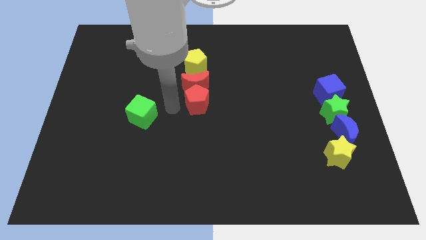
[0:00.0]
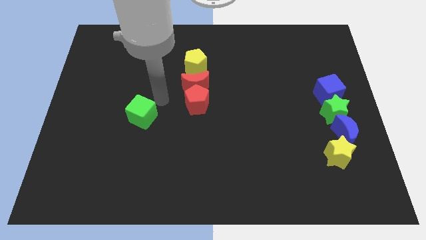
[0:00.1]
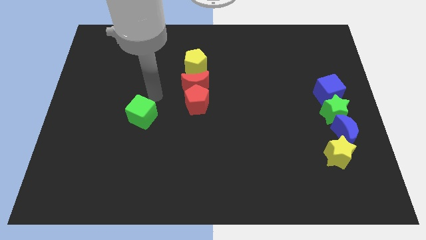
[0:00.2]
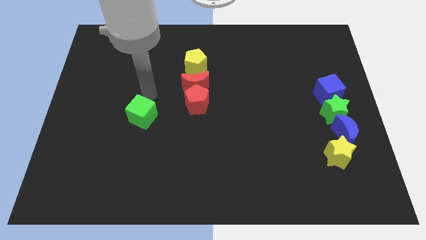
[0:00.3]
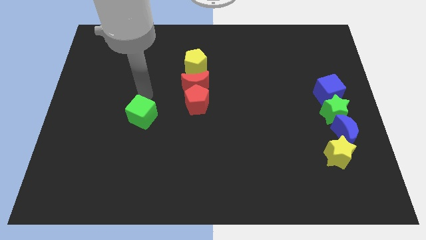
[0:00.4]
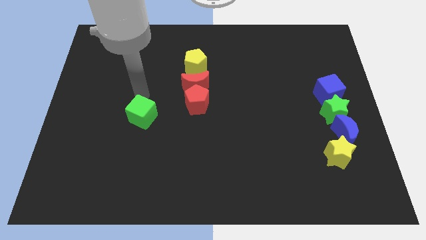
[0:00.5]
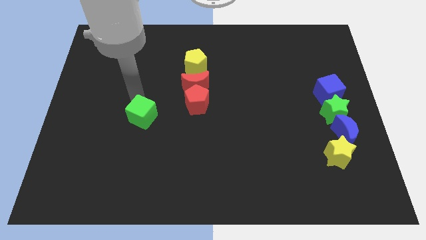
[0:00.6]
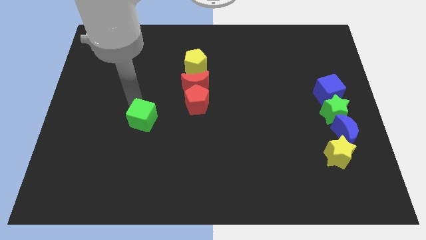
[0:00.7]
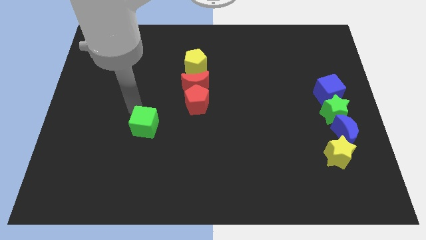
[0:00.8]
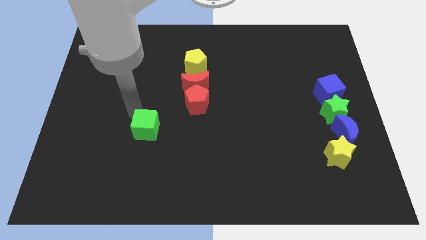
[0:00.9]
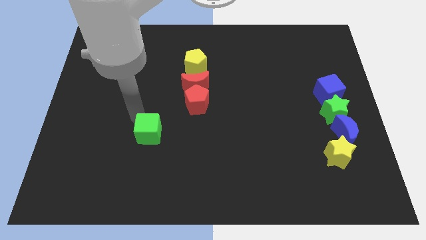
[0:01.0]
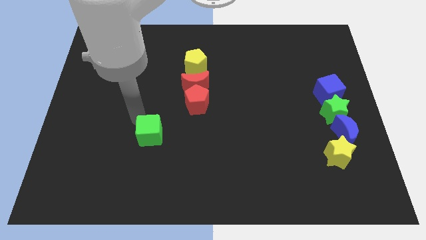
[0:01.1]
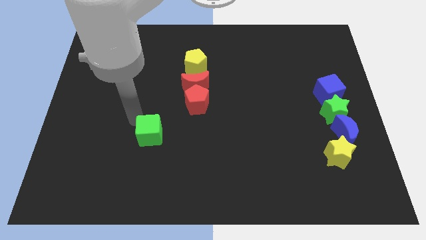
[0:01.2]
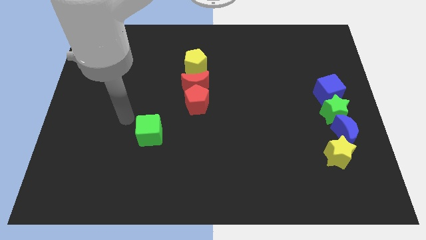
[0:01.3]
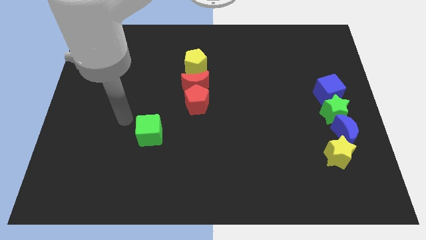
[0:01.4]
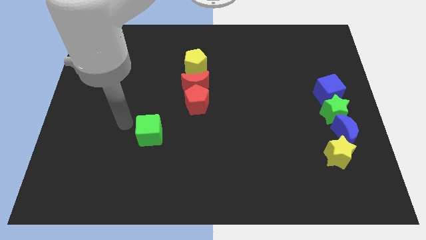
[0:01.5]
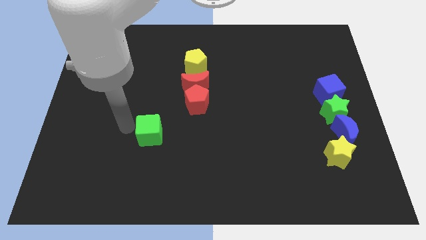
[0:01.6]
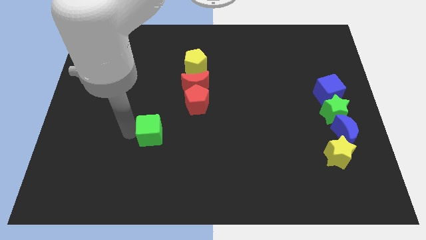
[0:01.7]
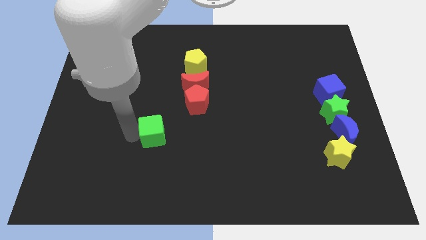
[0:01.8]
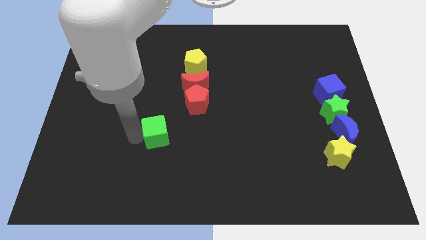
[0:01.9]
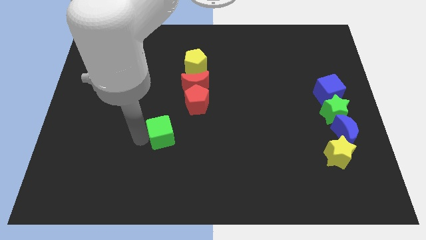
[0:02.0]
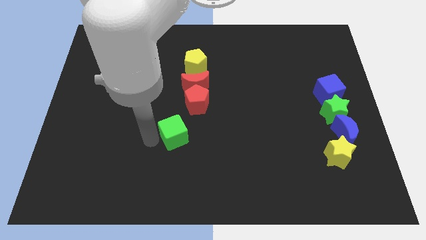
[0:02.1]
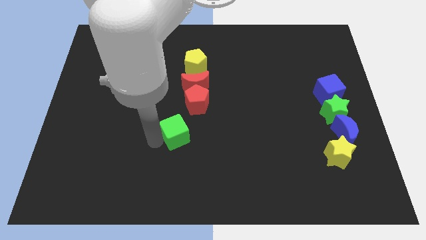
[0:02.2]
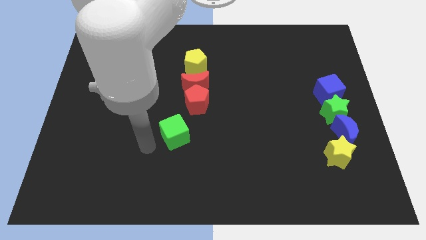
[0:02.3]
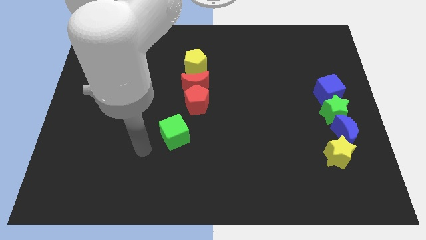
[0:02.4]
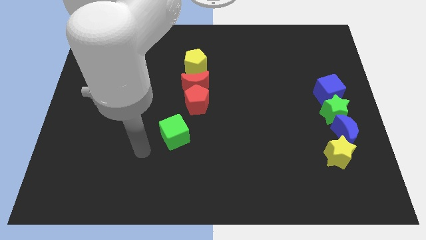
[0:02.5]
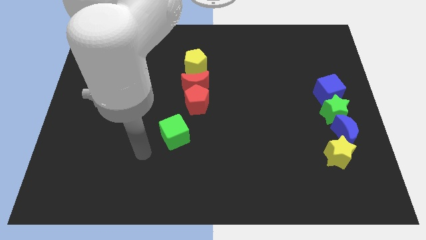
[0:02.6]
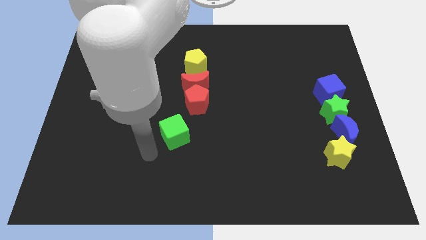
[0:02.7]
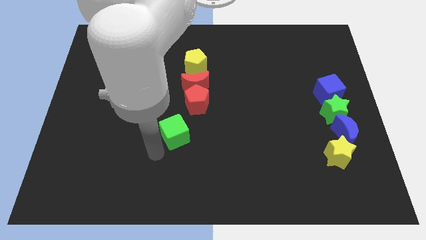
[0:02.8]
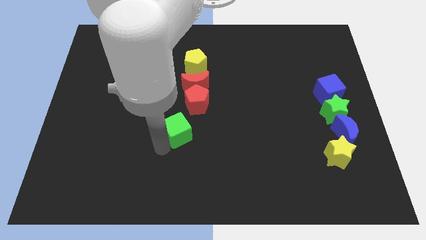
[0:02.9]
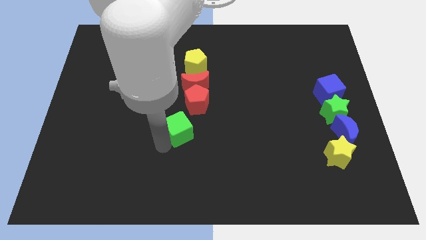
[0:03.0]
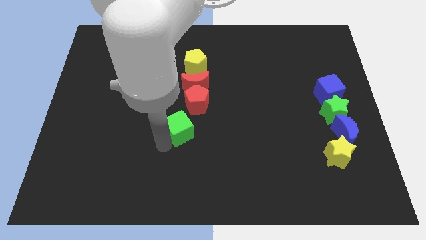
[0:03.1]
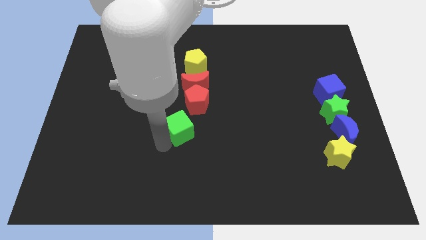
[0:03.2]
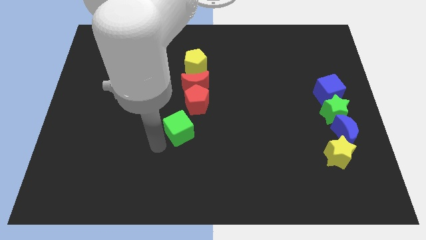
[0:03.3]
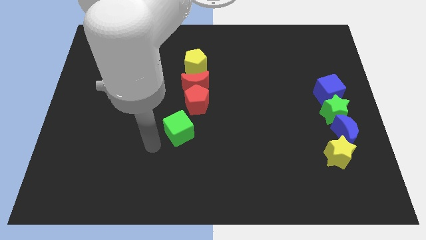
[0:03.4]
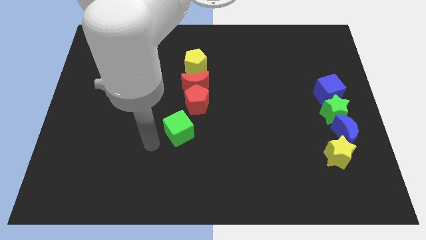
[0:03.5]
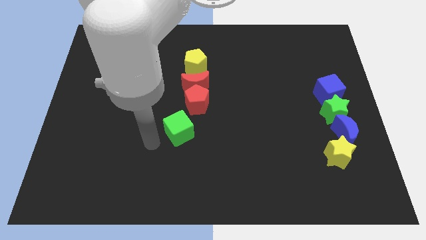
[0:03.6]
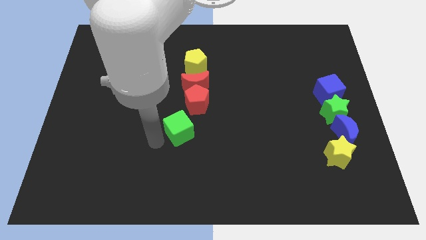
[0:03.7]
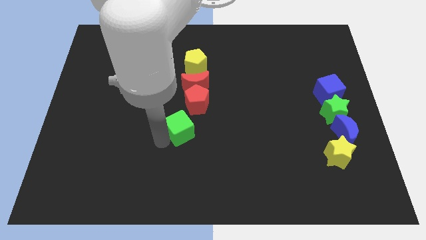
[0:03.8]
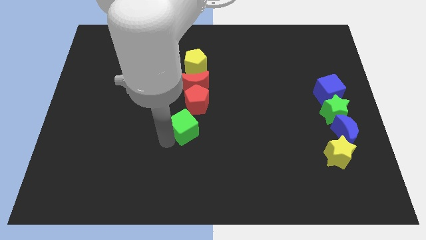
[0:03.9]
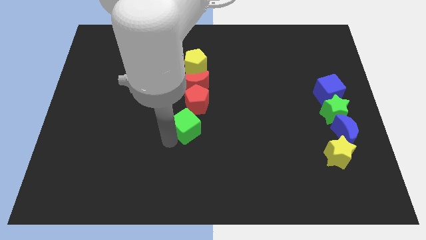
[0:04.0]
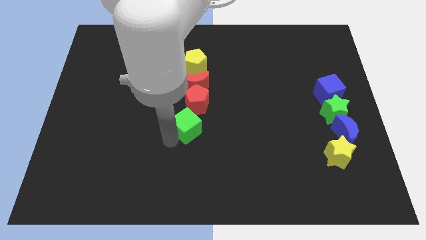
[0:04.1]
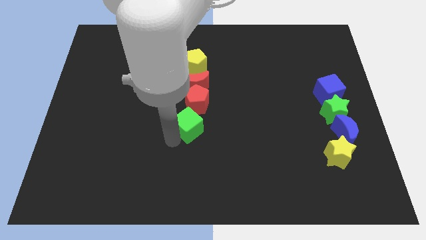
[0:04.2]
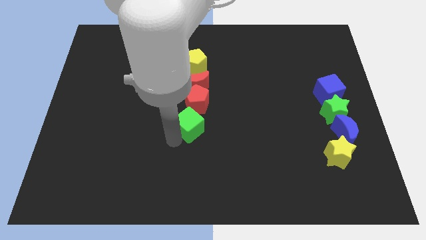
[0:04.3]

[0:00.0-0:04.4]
place the green cube below the red pentagon

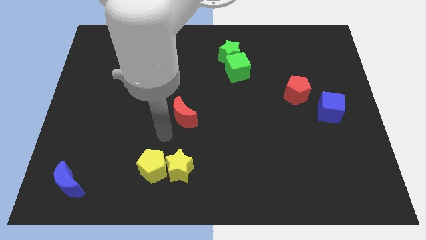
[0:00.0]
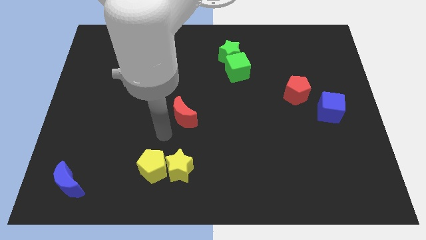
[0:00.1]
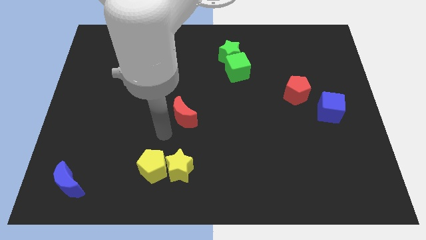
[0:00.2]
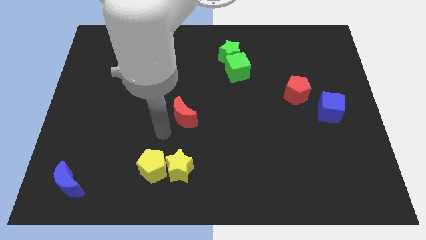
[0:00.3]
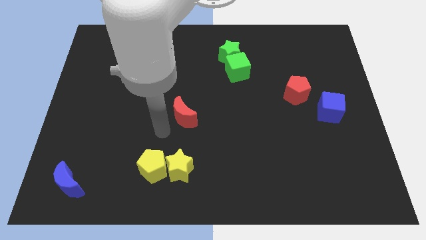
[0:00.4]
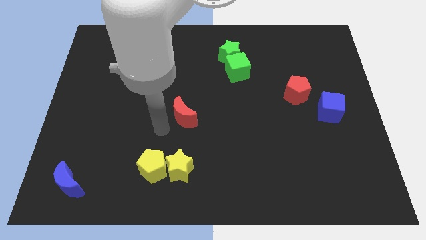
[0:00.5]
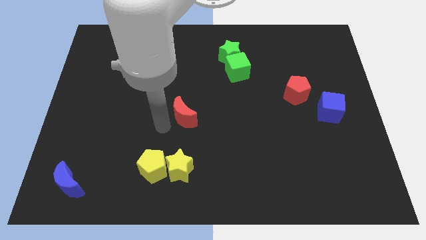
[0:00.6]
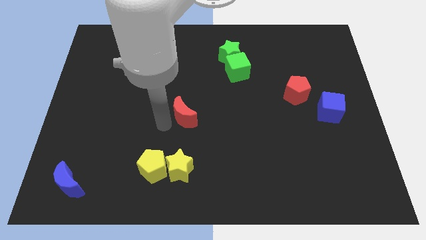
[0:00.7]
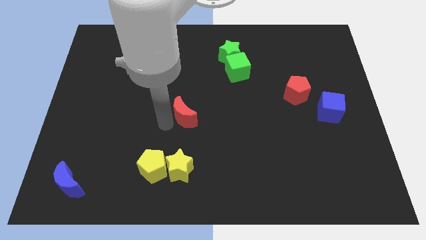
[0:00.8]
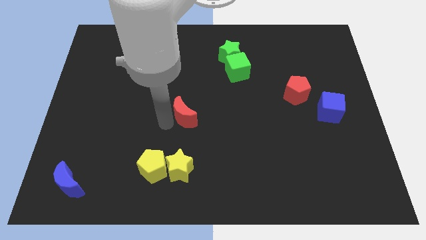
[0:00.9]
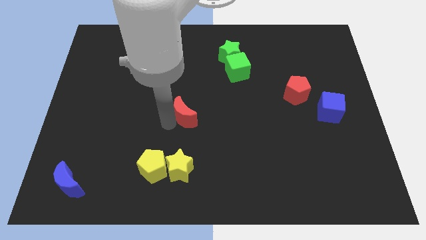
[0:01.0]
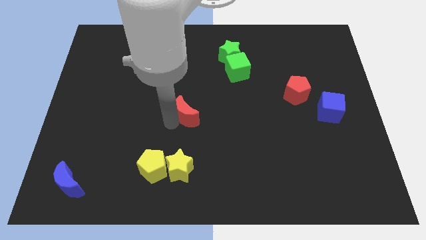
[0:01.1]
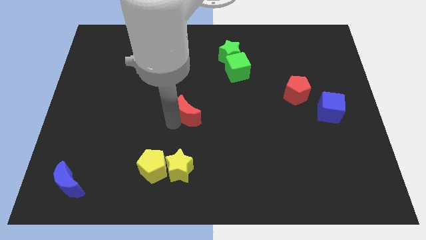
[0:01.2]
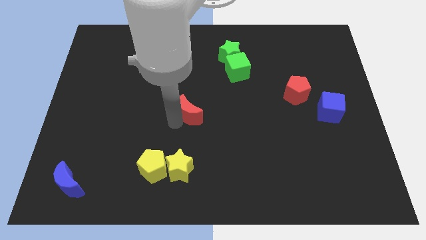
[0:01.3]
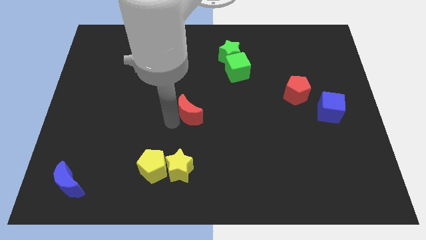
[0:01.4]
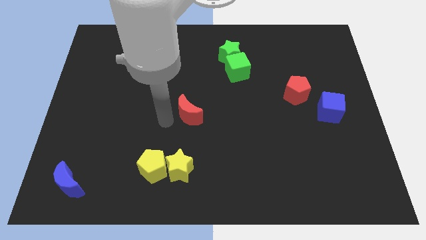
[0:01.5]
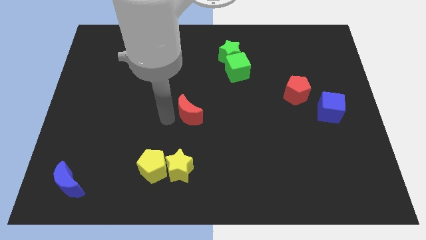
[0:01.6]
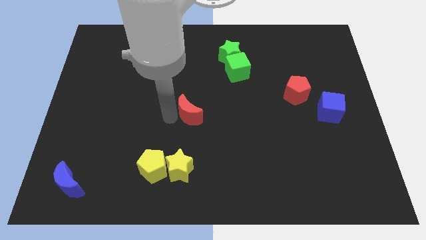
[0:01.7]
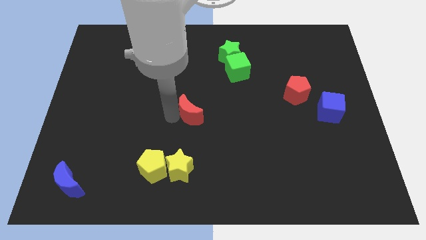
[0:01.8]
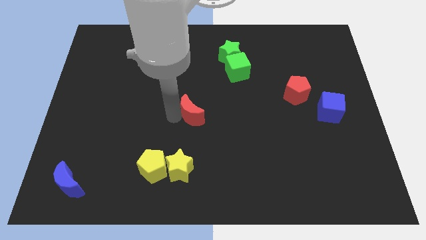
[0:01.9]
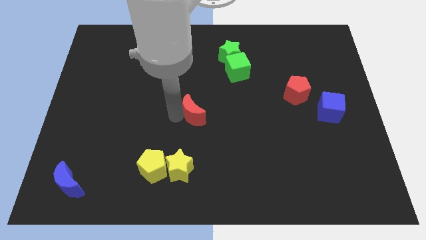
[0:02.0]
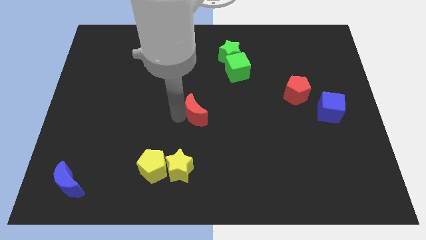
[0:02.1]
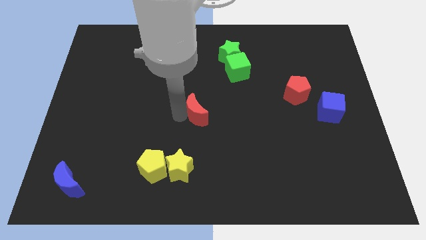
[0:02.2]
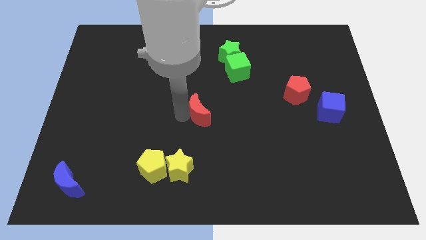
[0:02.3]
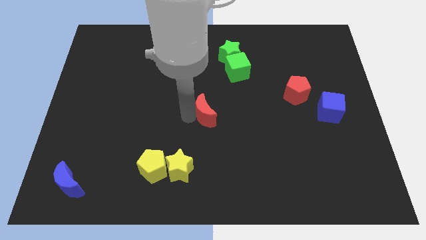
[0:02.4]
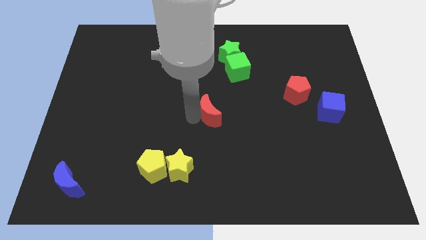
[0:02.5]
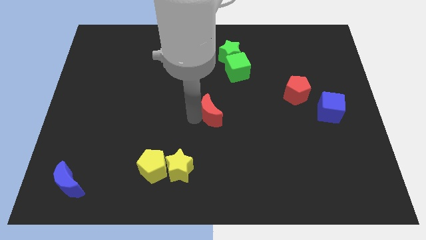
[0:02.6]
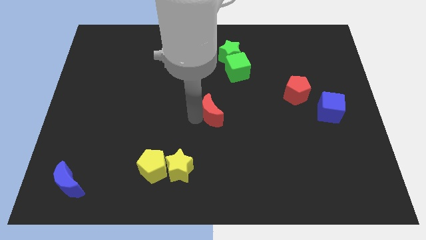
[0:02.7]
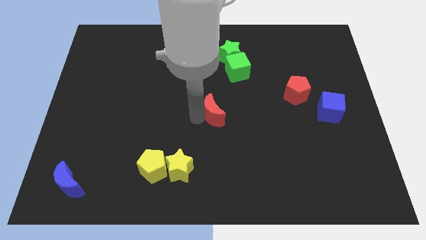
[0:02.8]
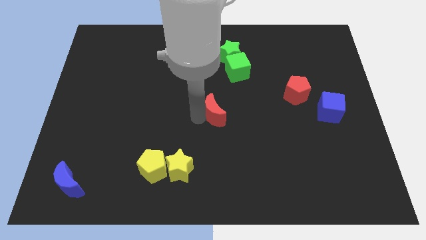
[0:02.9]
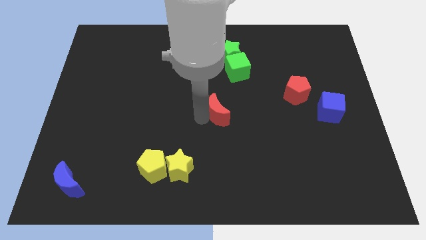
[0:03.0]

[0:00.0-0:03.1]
move the red crescent towards the center right

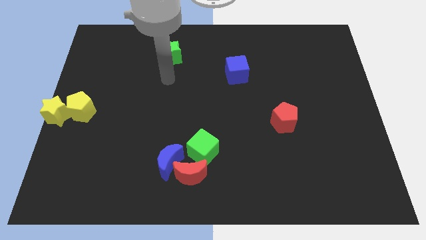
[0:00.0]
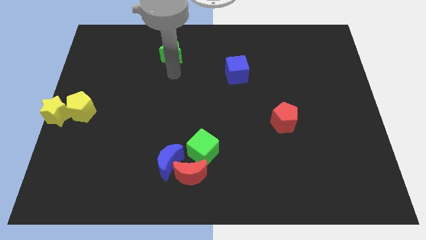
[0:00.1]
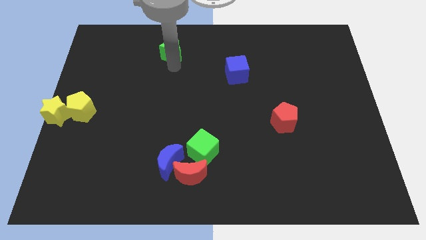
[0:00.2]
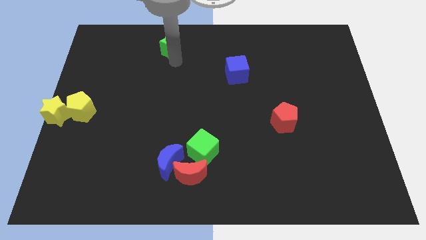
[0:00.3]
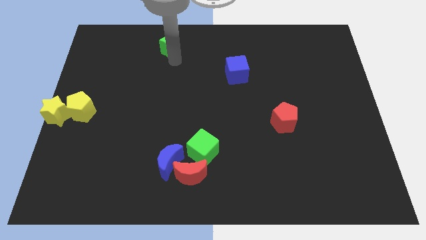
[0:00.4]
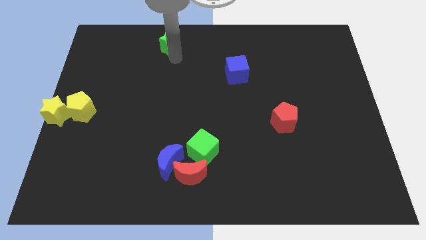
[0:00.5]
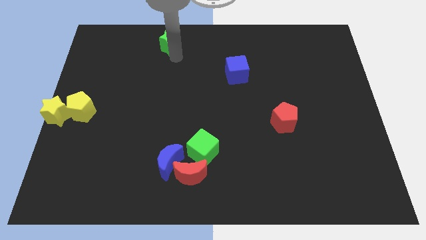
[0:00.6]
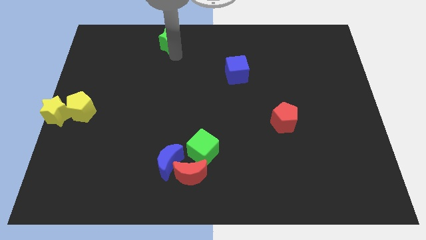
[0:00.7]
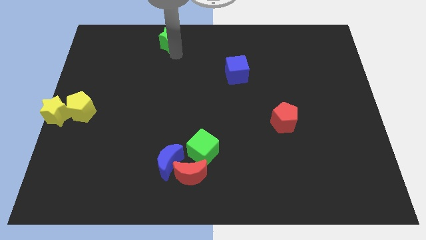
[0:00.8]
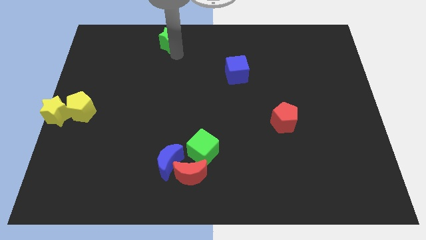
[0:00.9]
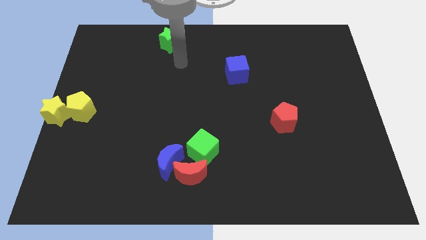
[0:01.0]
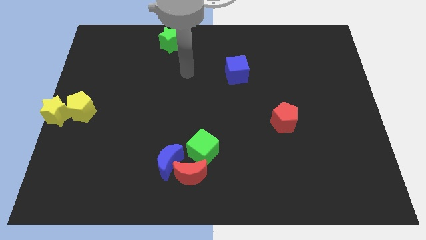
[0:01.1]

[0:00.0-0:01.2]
slide the green star to the top center

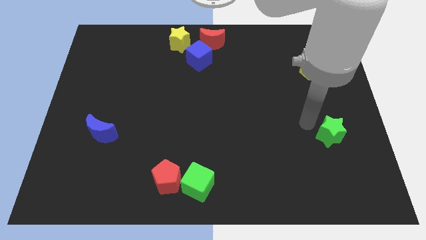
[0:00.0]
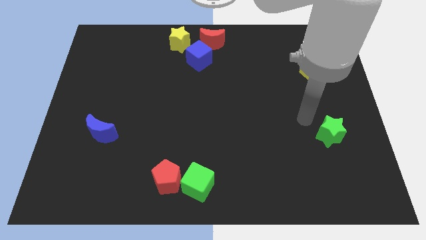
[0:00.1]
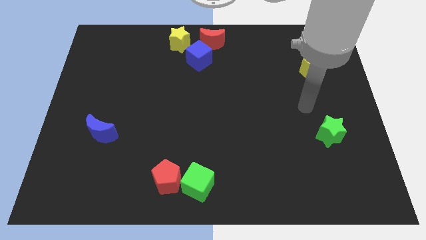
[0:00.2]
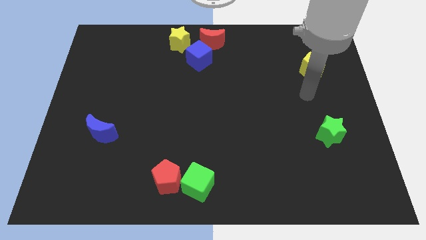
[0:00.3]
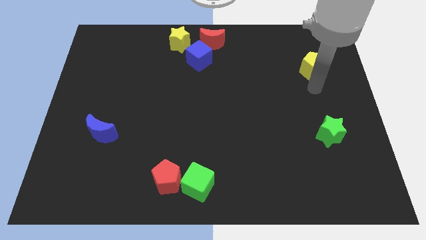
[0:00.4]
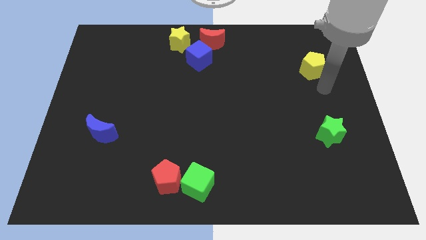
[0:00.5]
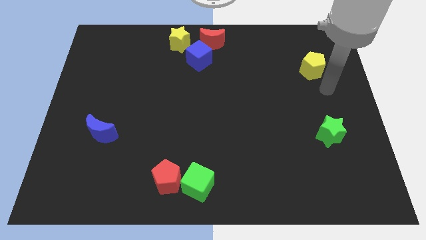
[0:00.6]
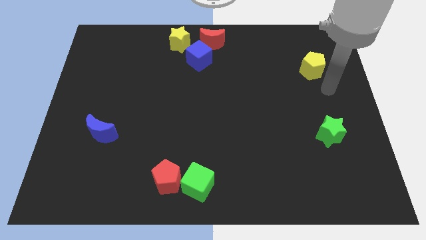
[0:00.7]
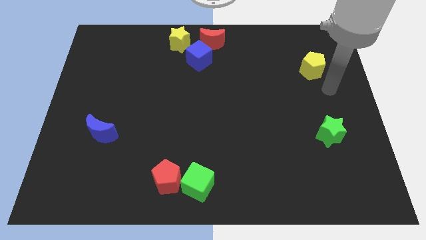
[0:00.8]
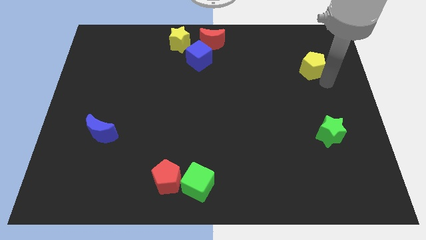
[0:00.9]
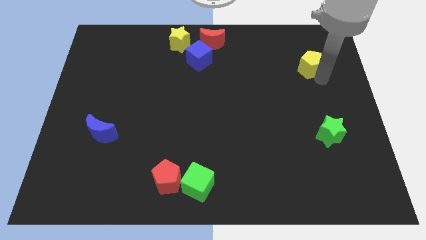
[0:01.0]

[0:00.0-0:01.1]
move the yellow pentagon towards the top
